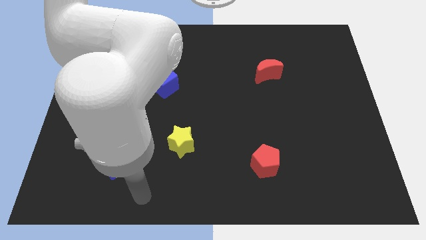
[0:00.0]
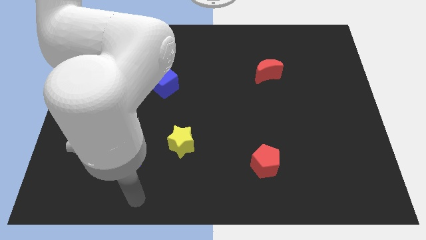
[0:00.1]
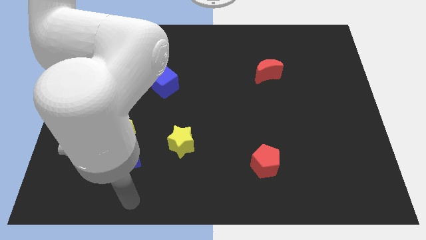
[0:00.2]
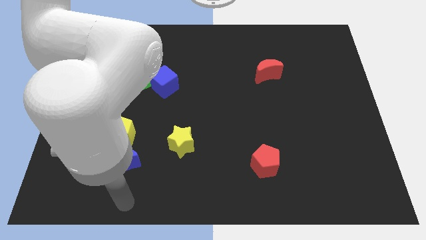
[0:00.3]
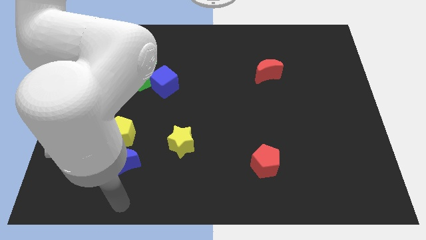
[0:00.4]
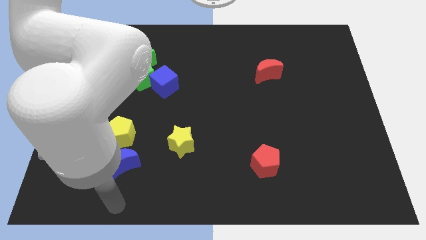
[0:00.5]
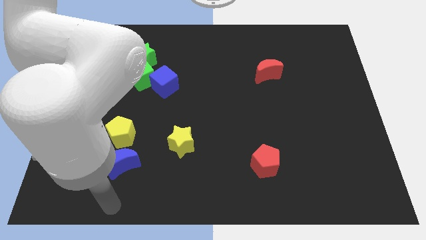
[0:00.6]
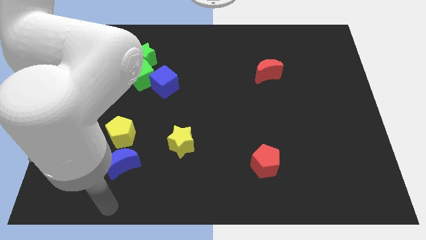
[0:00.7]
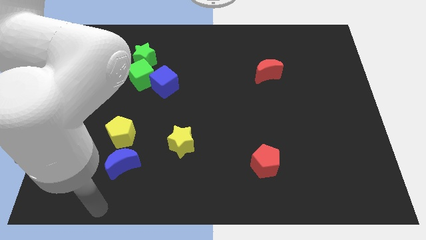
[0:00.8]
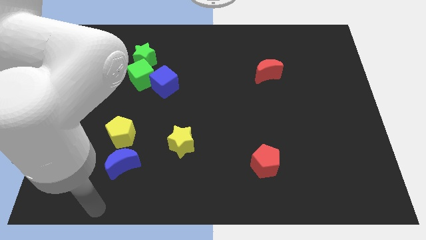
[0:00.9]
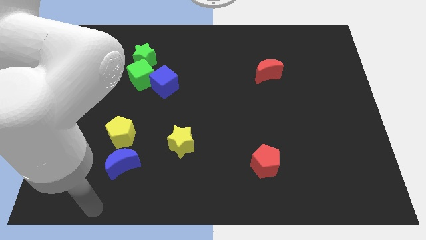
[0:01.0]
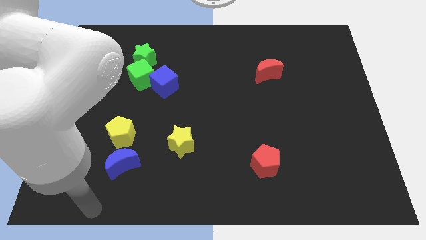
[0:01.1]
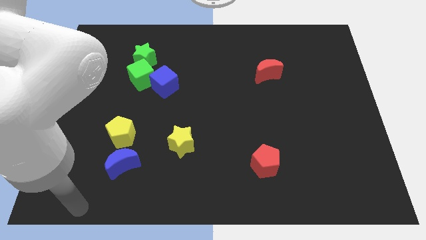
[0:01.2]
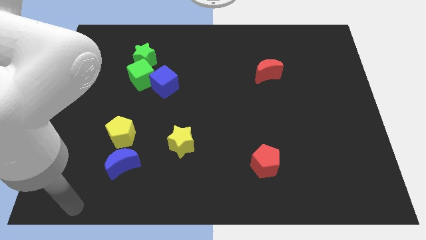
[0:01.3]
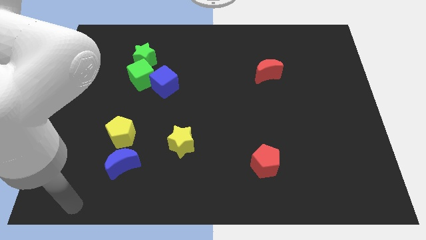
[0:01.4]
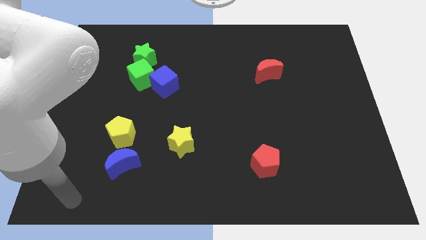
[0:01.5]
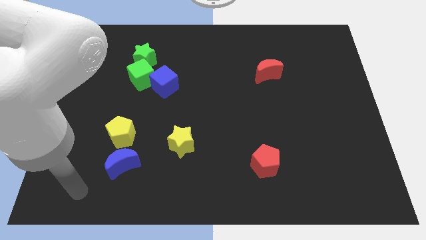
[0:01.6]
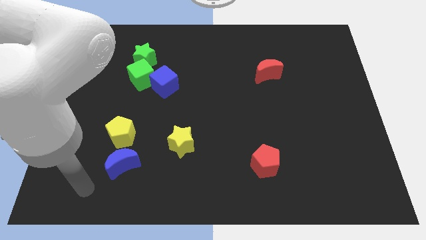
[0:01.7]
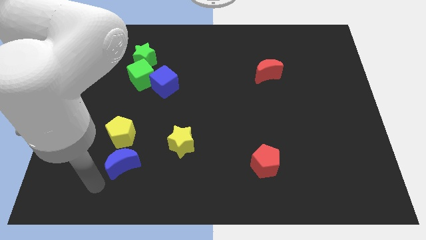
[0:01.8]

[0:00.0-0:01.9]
put your arm close to the left side of the blue moon

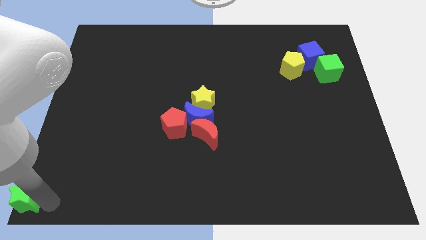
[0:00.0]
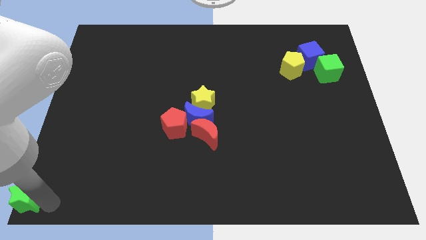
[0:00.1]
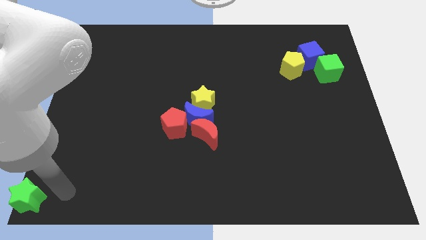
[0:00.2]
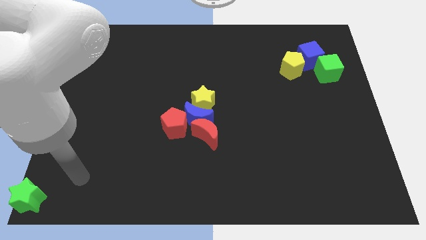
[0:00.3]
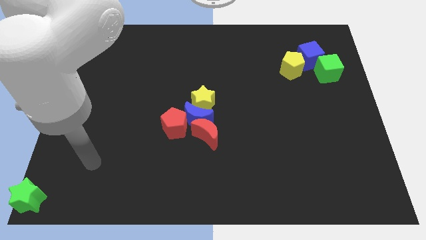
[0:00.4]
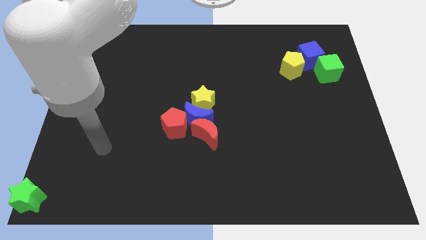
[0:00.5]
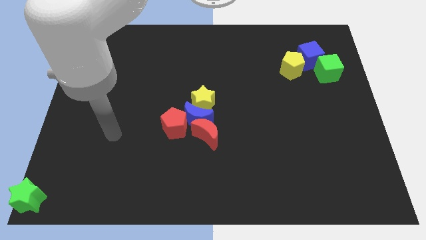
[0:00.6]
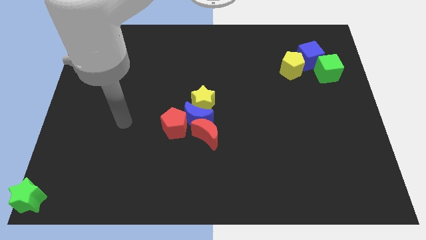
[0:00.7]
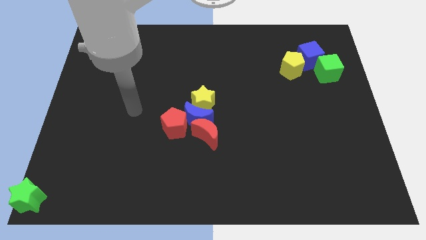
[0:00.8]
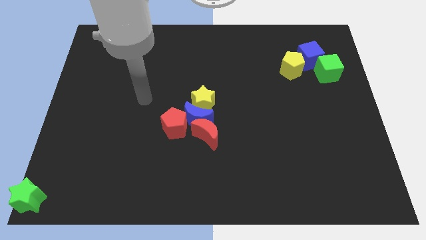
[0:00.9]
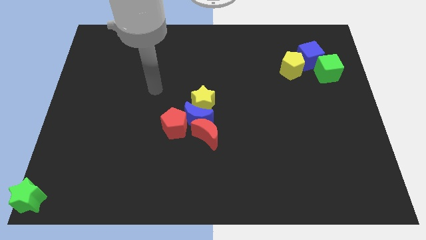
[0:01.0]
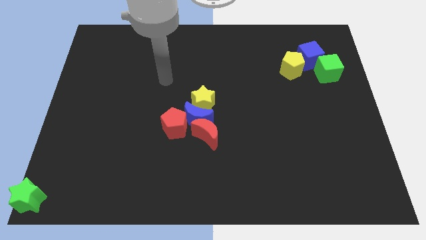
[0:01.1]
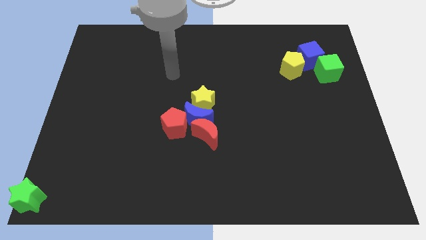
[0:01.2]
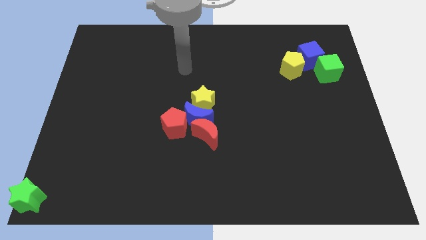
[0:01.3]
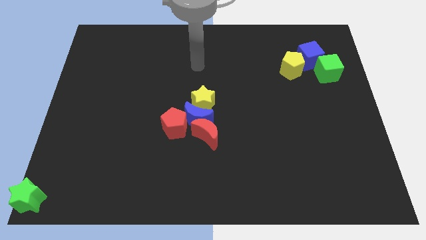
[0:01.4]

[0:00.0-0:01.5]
move your arm away from green star

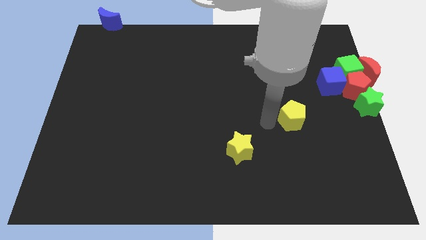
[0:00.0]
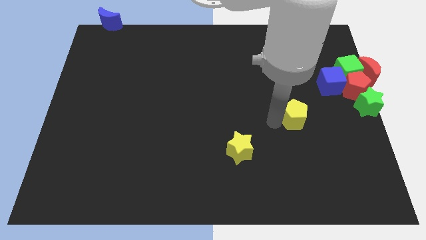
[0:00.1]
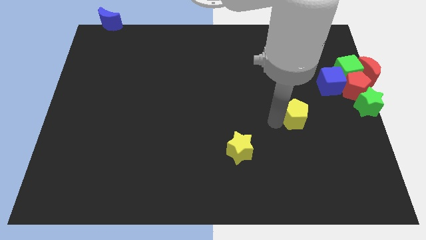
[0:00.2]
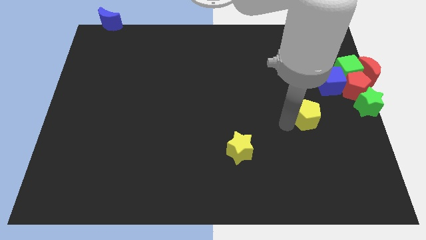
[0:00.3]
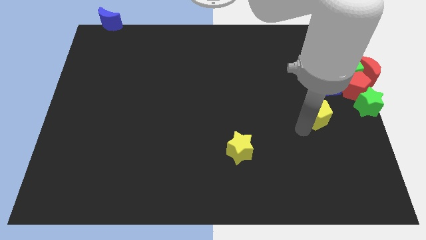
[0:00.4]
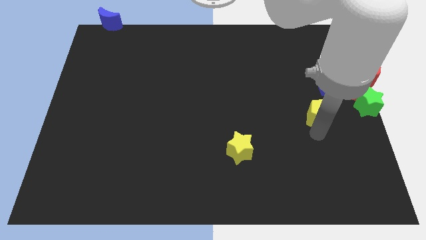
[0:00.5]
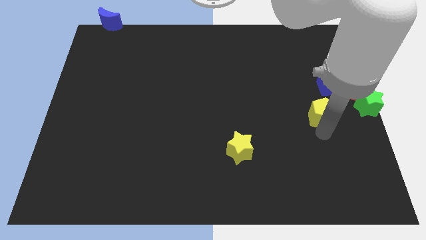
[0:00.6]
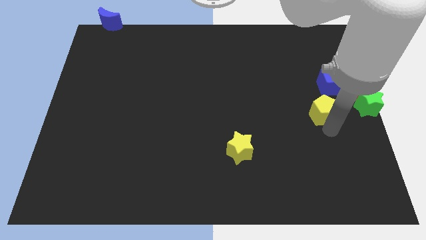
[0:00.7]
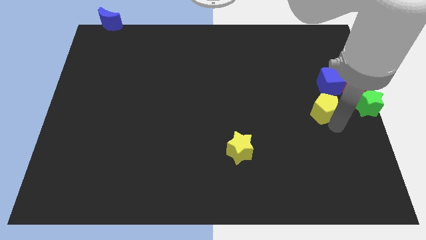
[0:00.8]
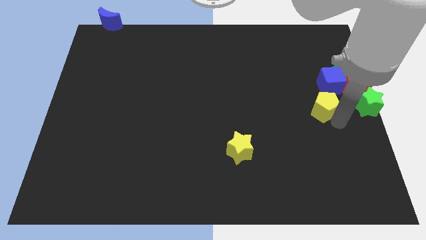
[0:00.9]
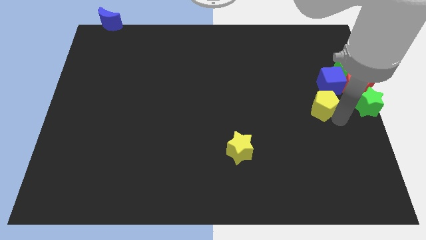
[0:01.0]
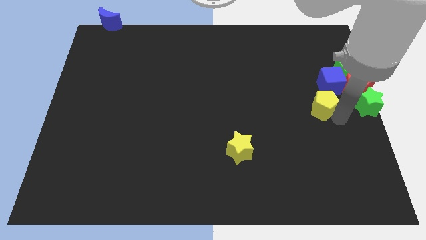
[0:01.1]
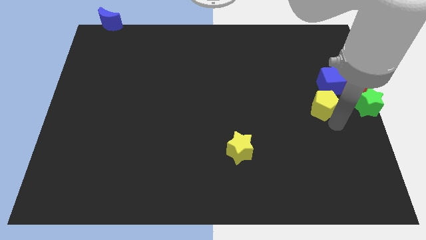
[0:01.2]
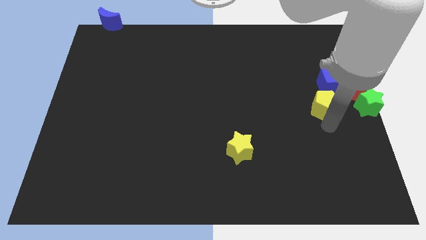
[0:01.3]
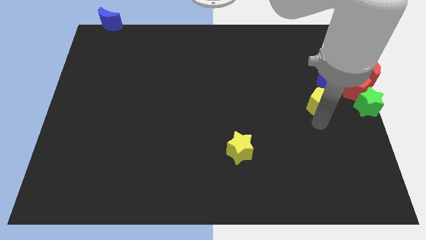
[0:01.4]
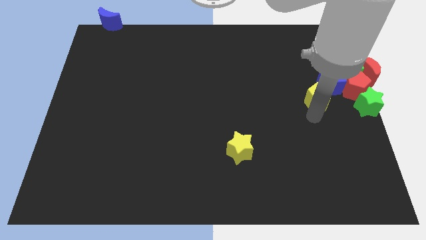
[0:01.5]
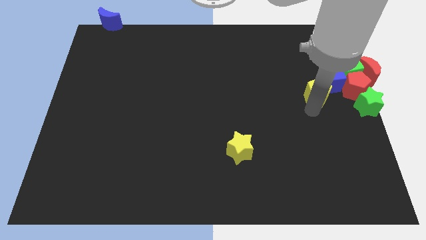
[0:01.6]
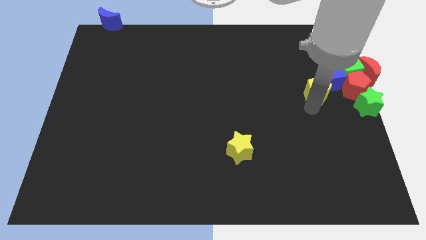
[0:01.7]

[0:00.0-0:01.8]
move the yellow pentagon towards the group of blocks

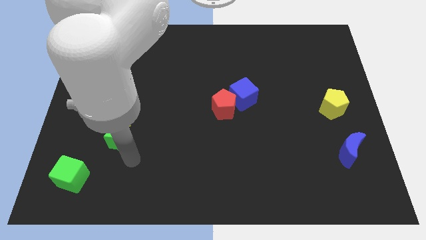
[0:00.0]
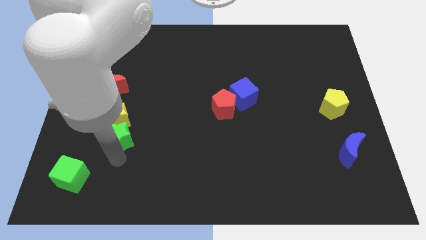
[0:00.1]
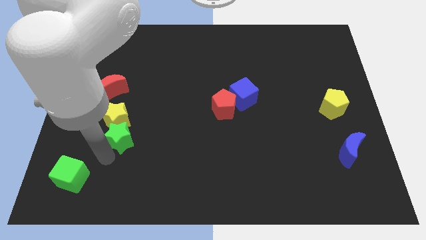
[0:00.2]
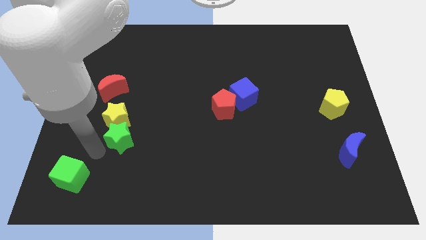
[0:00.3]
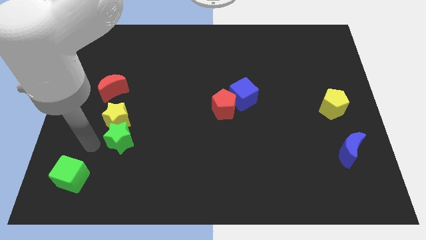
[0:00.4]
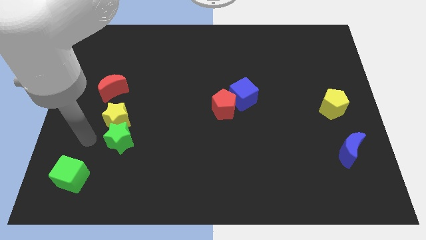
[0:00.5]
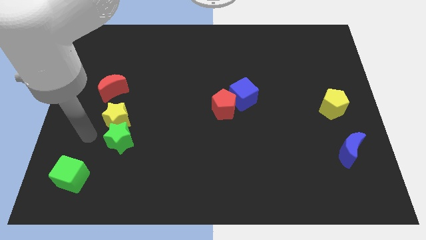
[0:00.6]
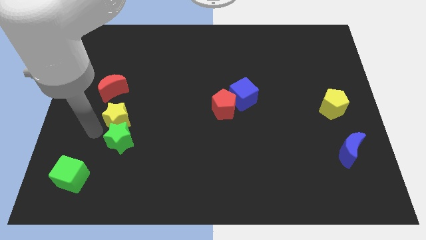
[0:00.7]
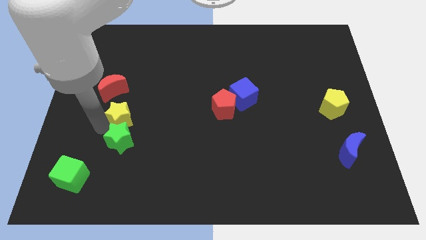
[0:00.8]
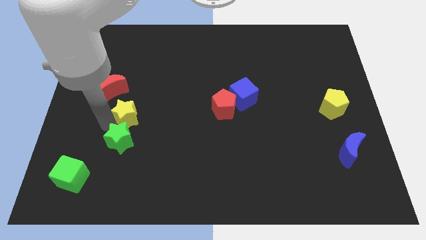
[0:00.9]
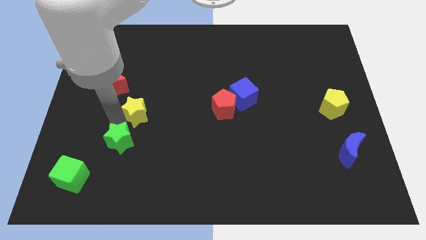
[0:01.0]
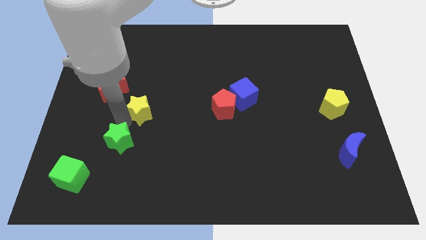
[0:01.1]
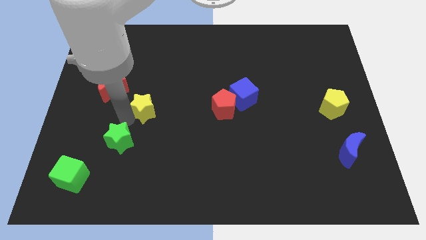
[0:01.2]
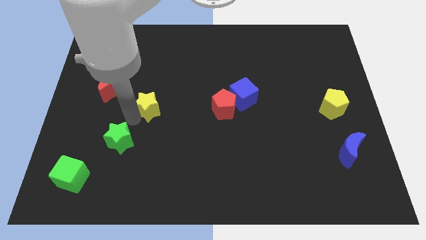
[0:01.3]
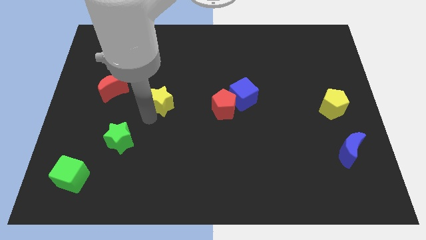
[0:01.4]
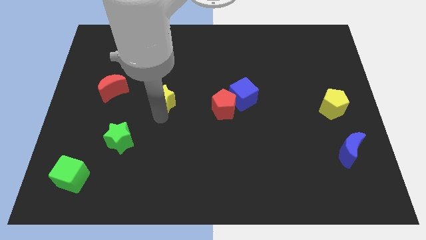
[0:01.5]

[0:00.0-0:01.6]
slightly push the yellow star towards right

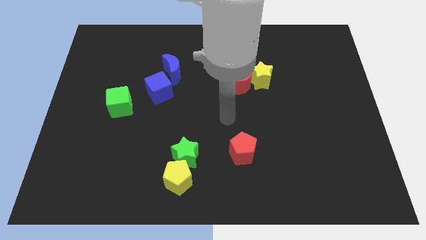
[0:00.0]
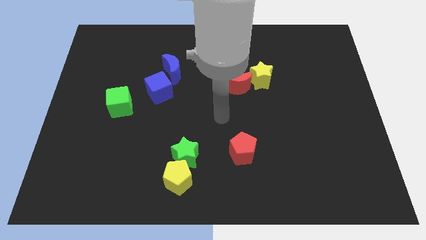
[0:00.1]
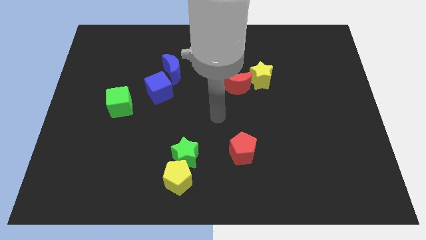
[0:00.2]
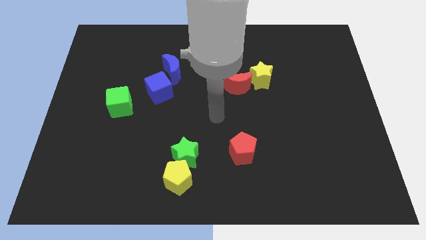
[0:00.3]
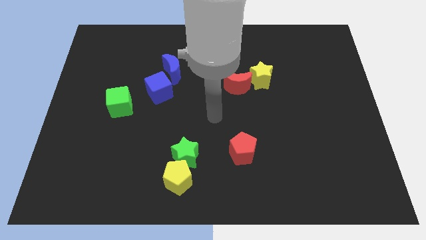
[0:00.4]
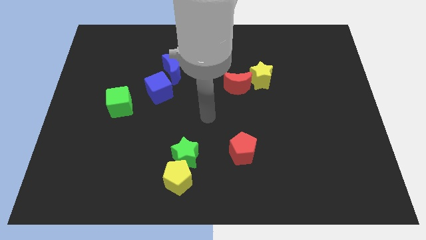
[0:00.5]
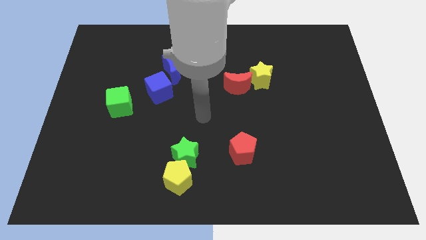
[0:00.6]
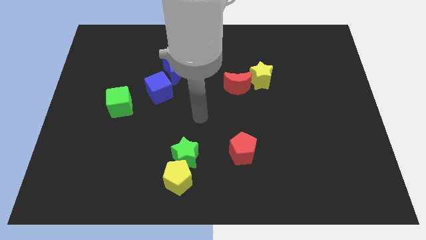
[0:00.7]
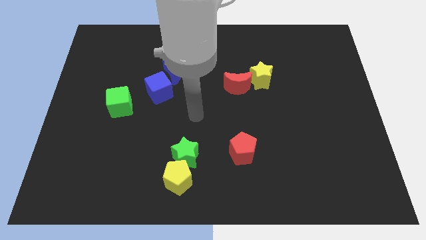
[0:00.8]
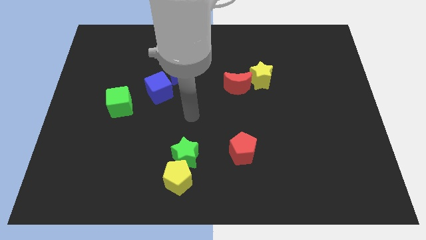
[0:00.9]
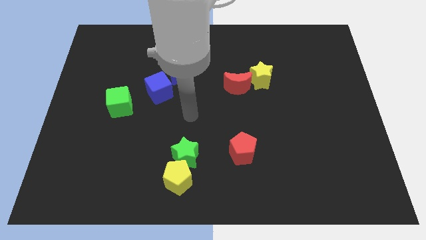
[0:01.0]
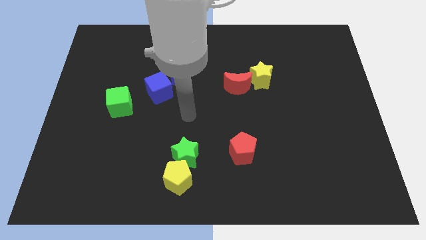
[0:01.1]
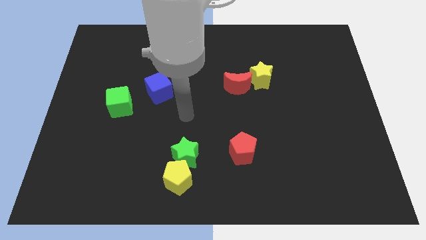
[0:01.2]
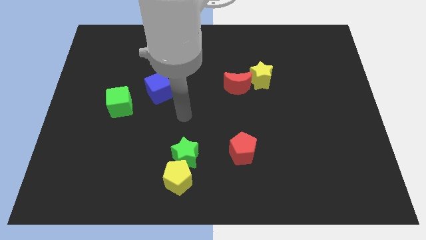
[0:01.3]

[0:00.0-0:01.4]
place your arm at the top of the green star

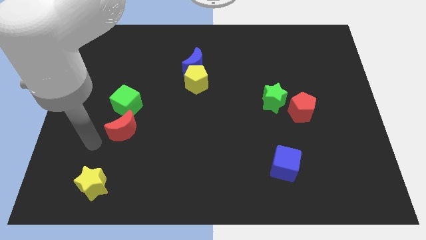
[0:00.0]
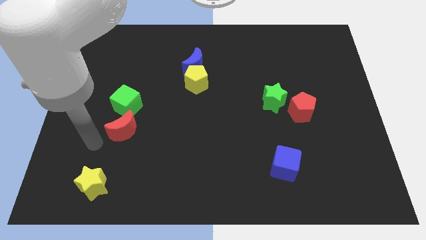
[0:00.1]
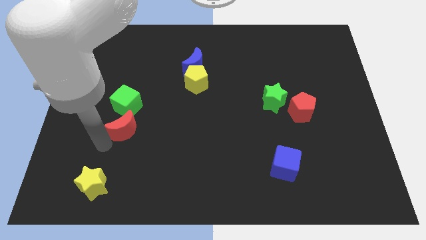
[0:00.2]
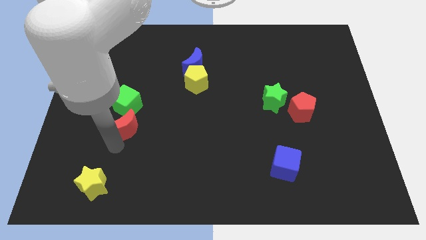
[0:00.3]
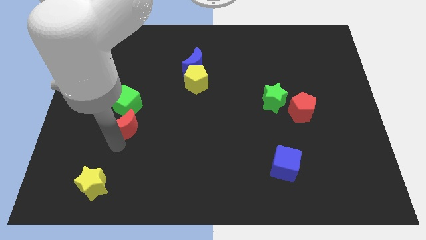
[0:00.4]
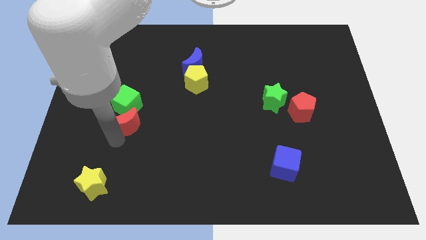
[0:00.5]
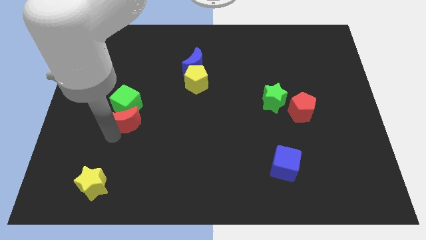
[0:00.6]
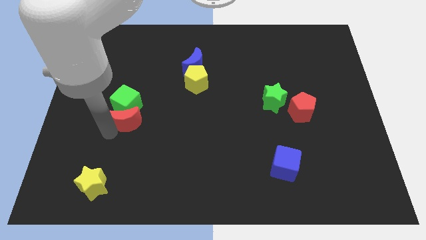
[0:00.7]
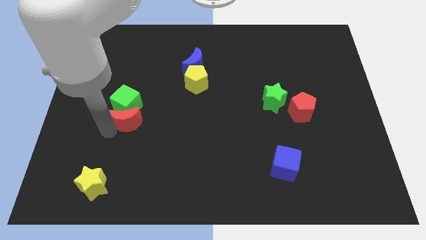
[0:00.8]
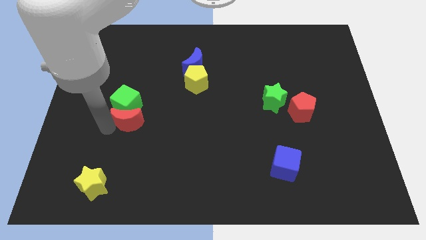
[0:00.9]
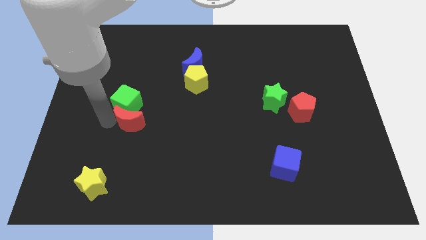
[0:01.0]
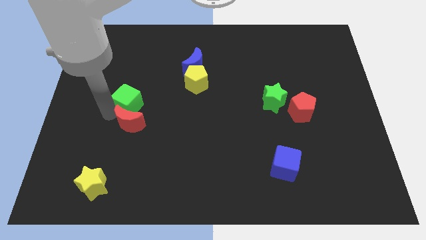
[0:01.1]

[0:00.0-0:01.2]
attach the red moon to the green cube
